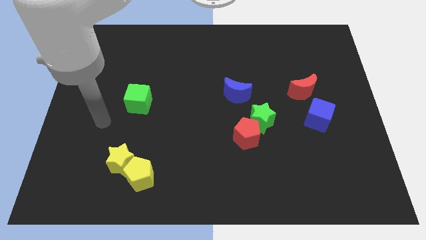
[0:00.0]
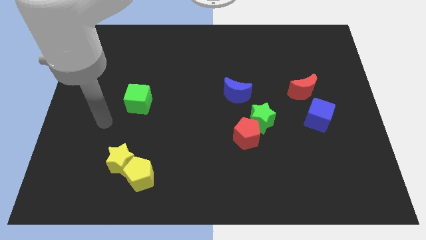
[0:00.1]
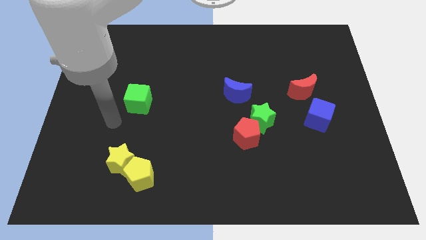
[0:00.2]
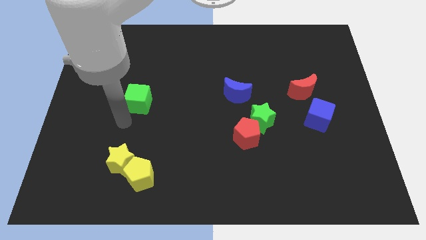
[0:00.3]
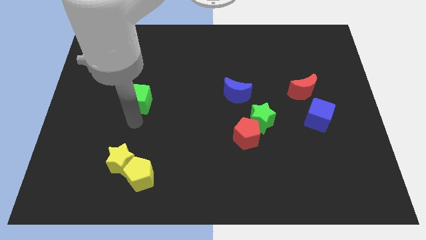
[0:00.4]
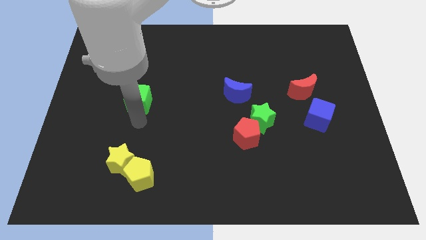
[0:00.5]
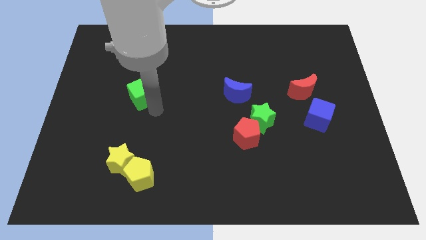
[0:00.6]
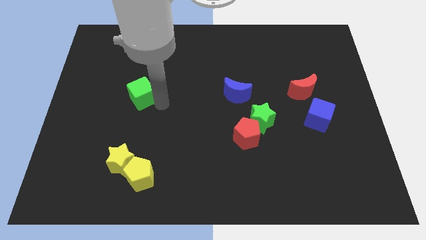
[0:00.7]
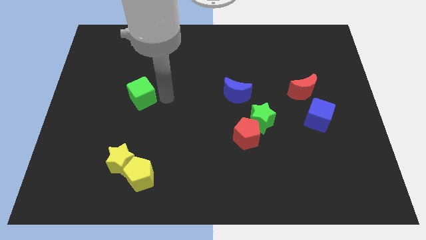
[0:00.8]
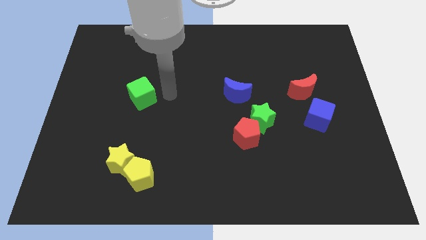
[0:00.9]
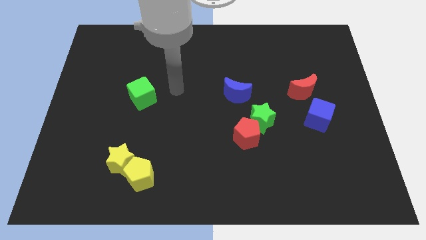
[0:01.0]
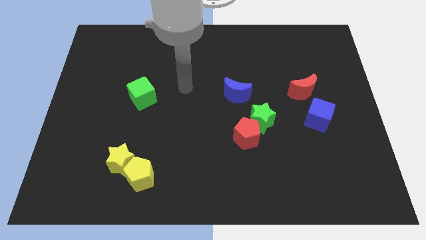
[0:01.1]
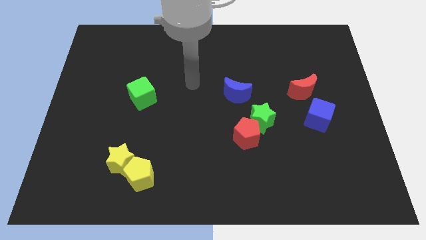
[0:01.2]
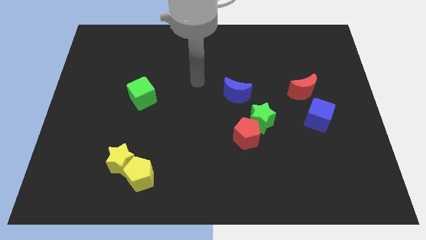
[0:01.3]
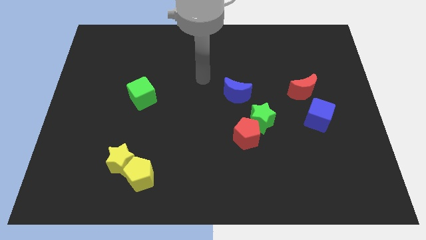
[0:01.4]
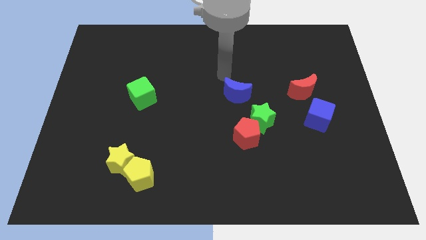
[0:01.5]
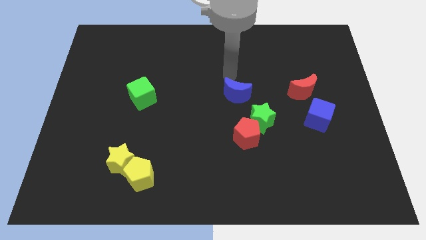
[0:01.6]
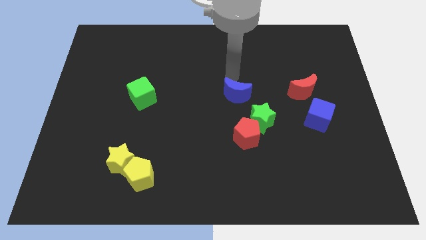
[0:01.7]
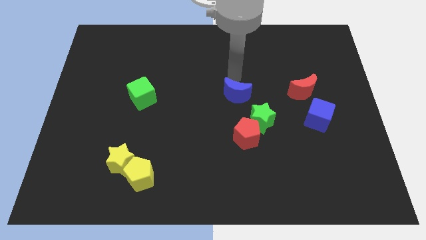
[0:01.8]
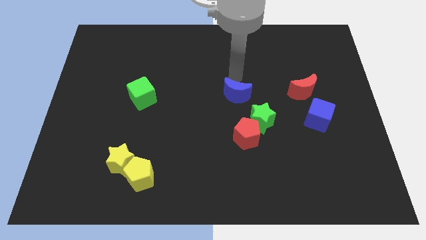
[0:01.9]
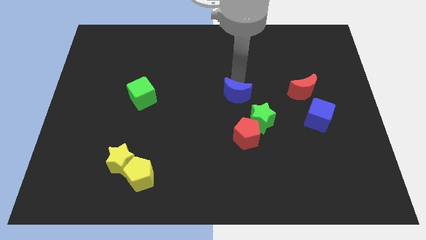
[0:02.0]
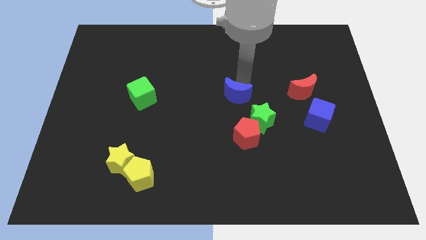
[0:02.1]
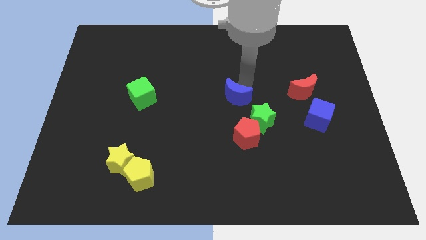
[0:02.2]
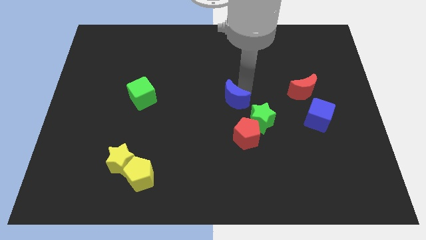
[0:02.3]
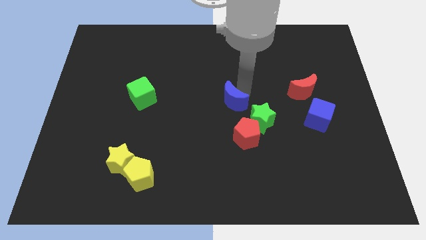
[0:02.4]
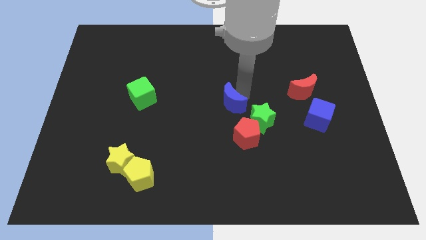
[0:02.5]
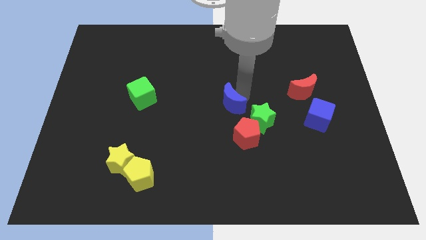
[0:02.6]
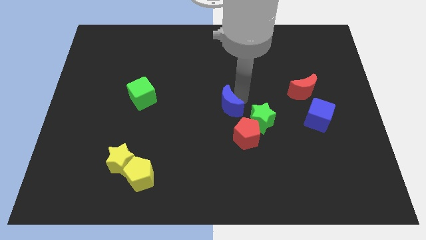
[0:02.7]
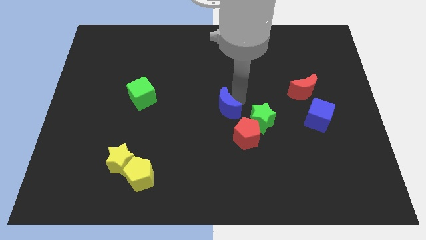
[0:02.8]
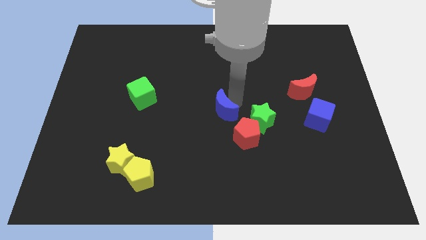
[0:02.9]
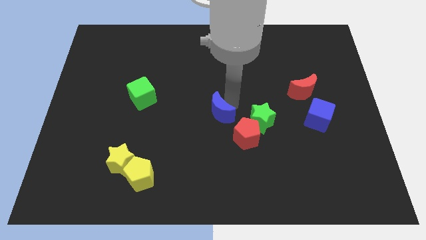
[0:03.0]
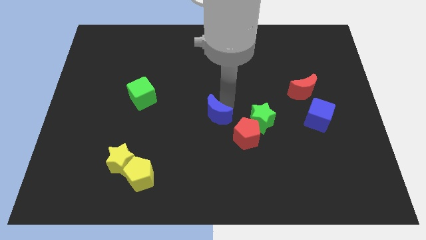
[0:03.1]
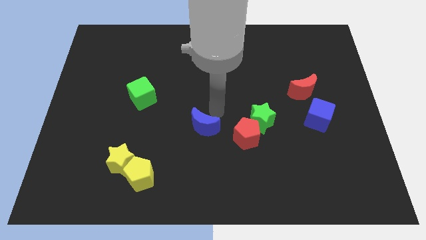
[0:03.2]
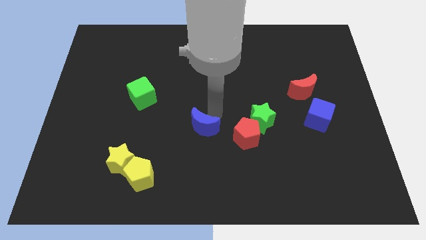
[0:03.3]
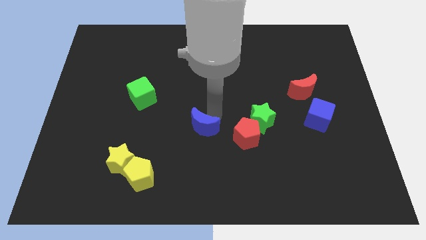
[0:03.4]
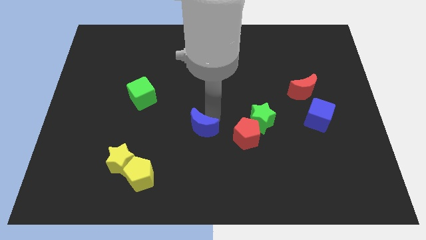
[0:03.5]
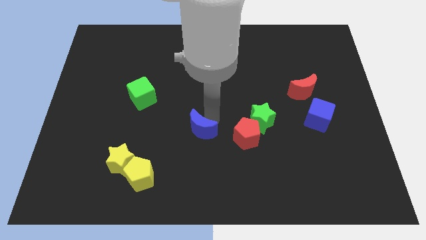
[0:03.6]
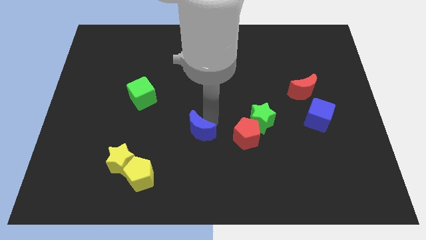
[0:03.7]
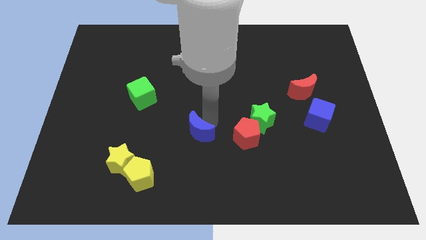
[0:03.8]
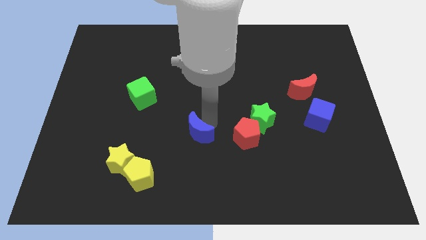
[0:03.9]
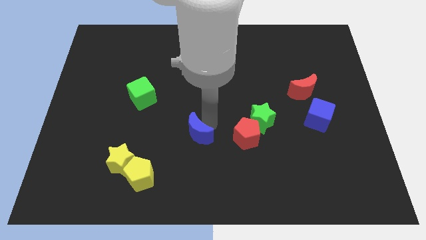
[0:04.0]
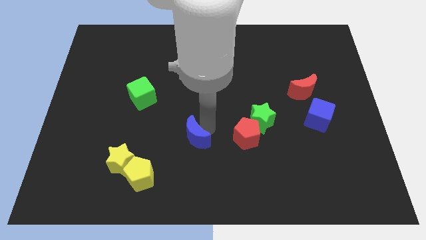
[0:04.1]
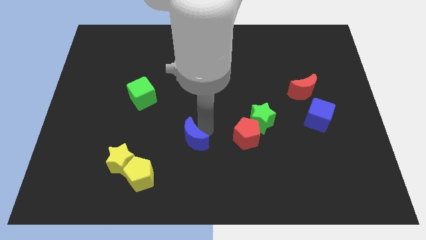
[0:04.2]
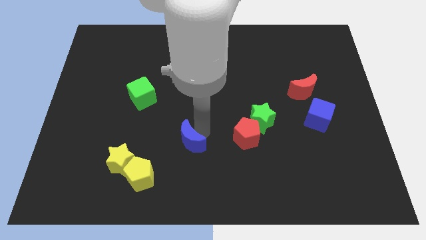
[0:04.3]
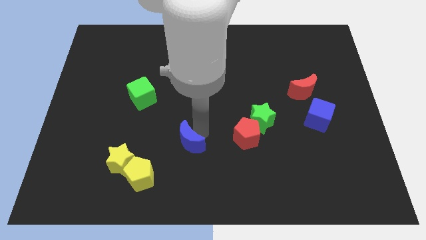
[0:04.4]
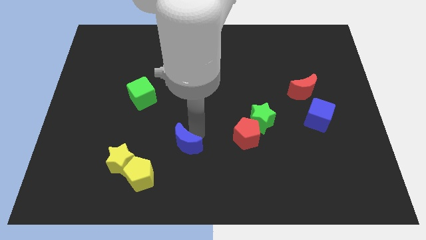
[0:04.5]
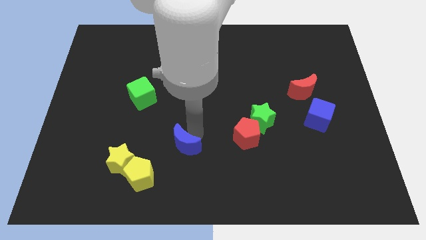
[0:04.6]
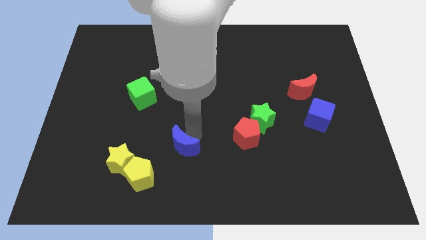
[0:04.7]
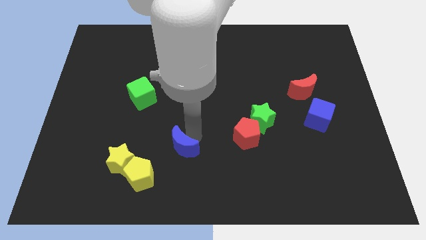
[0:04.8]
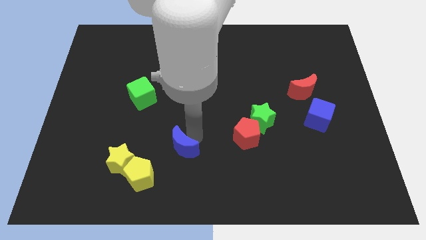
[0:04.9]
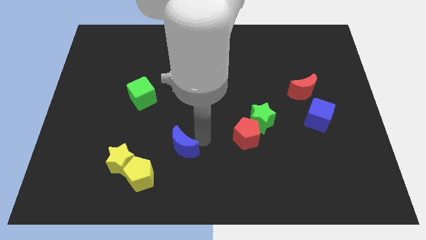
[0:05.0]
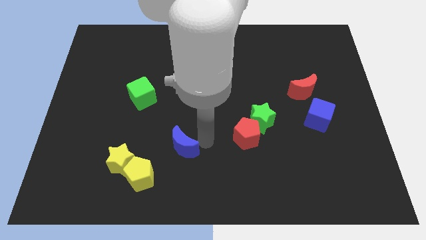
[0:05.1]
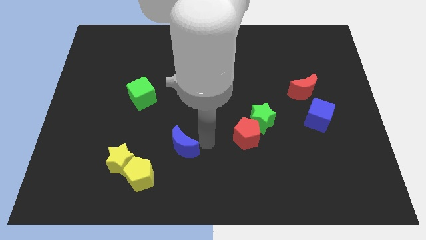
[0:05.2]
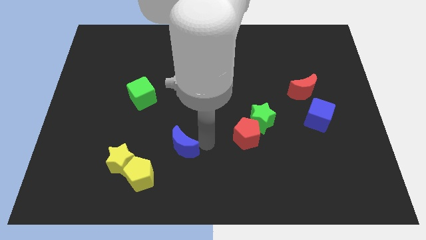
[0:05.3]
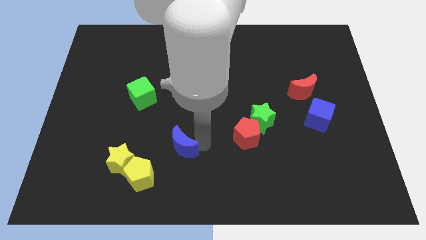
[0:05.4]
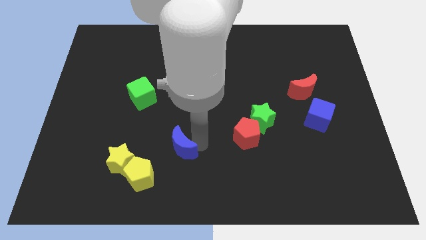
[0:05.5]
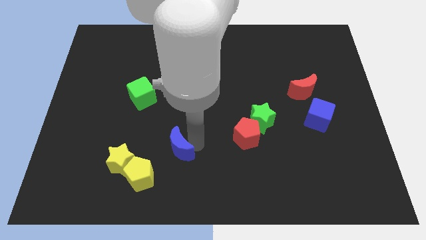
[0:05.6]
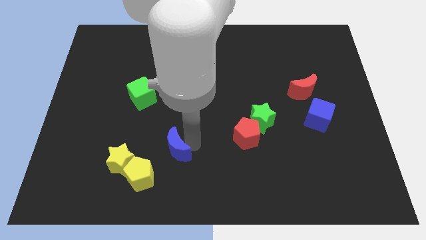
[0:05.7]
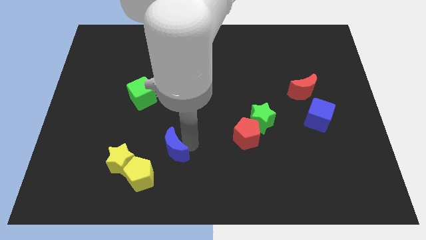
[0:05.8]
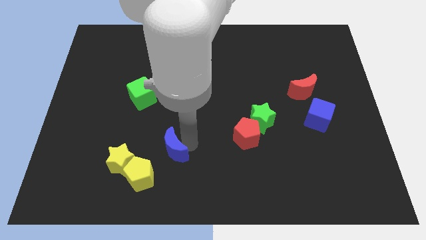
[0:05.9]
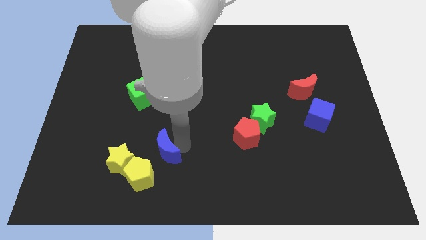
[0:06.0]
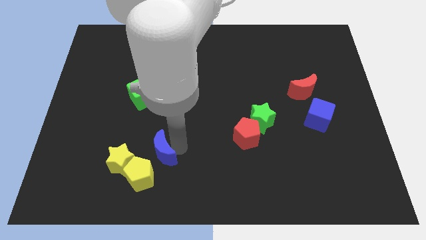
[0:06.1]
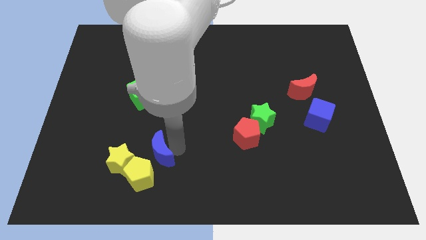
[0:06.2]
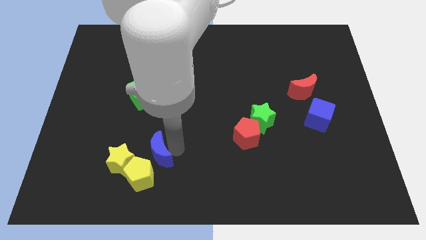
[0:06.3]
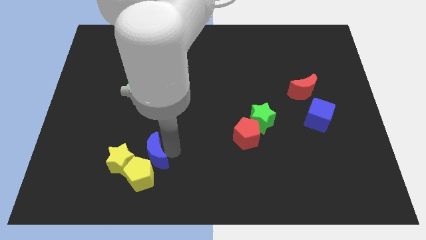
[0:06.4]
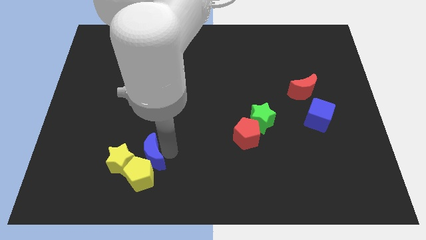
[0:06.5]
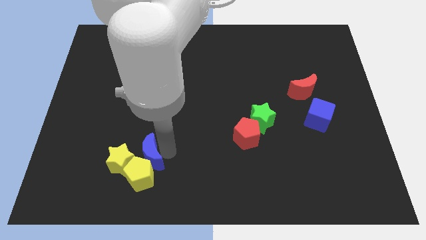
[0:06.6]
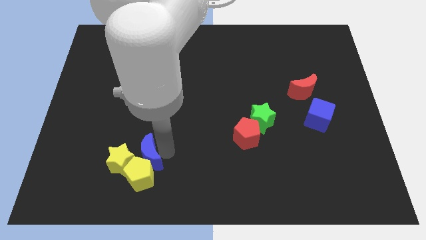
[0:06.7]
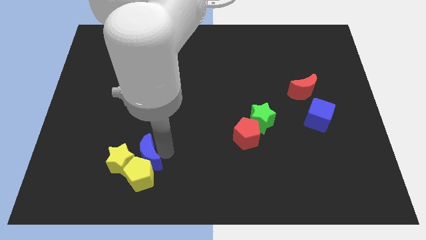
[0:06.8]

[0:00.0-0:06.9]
put the blue moon to the yellow star

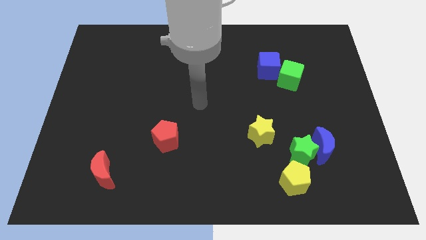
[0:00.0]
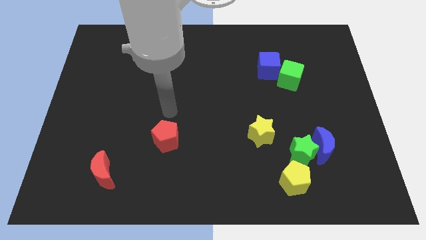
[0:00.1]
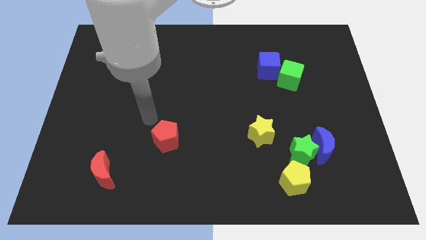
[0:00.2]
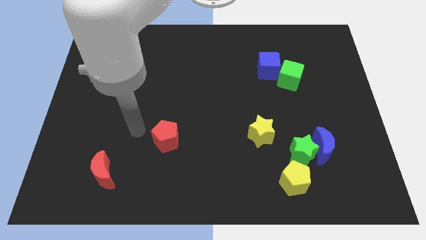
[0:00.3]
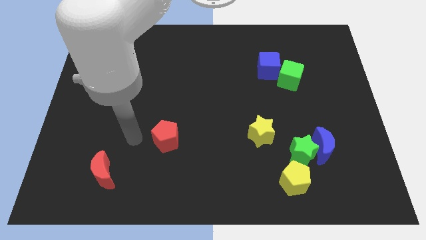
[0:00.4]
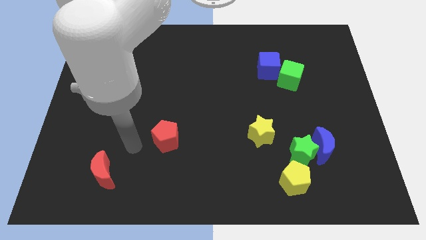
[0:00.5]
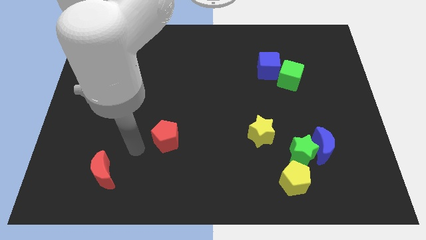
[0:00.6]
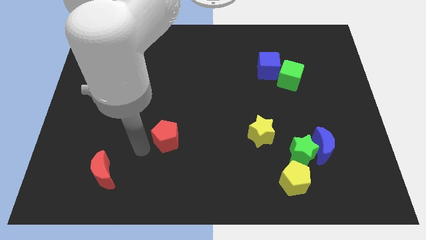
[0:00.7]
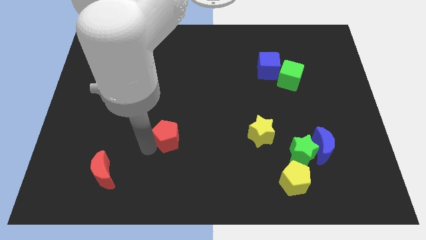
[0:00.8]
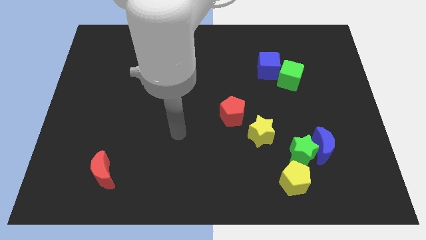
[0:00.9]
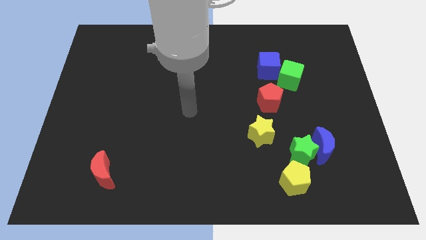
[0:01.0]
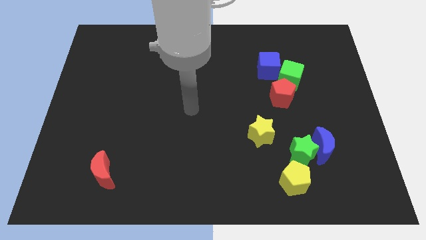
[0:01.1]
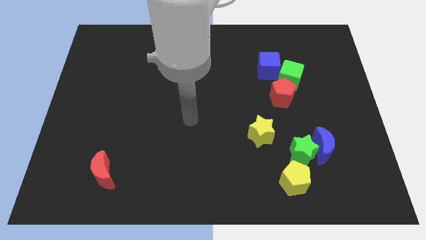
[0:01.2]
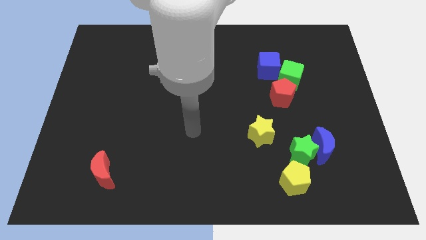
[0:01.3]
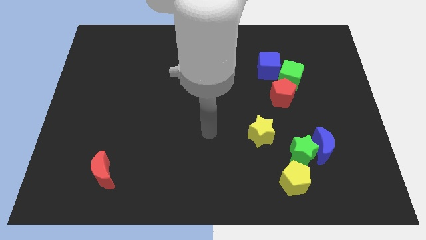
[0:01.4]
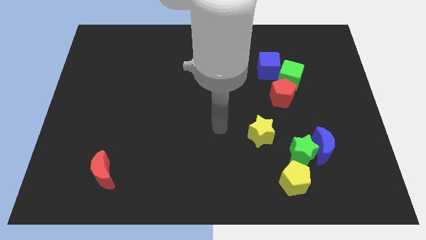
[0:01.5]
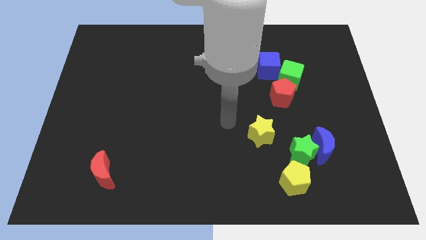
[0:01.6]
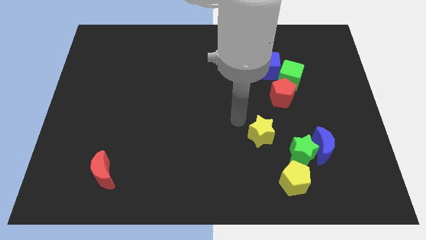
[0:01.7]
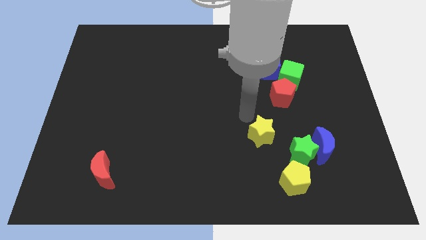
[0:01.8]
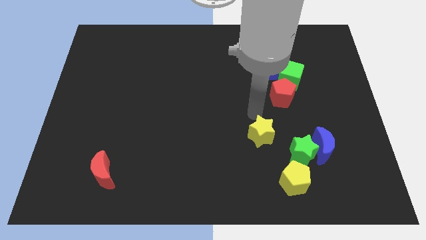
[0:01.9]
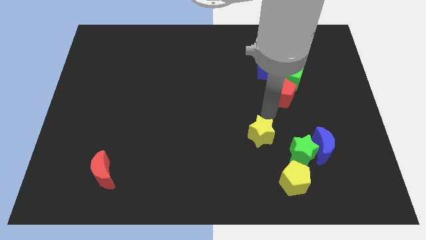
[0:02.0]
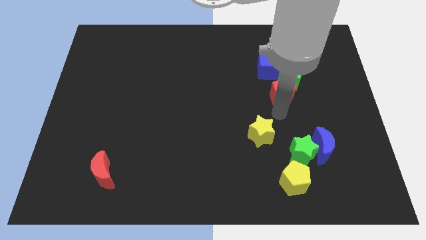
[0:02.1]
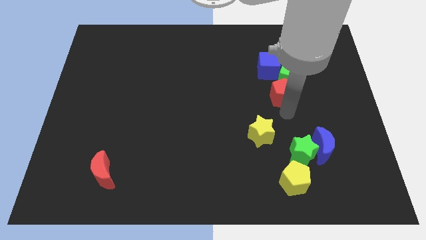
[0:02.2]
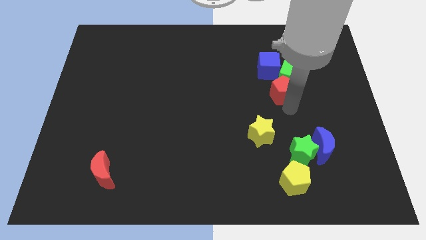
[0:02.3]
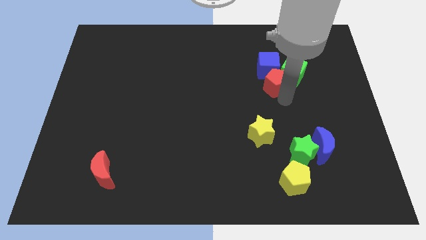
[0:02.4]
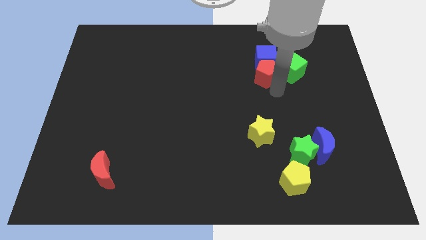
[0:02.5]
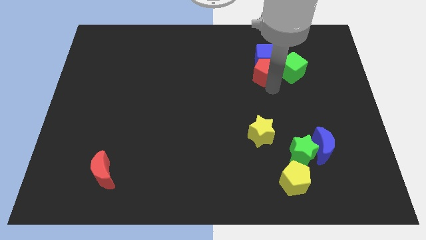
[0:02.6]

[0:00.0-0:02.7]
push the red pentagon to the blue cube
